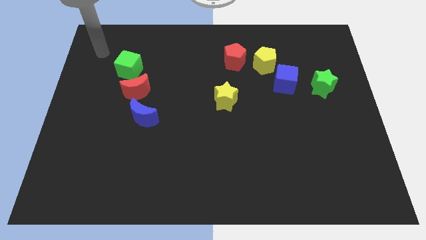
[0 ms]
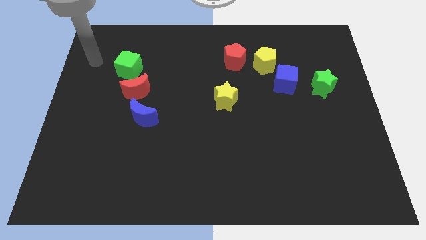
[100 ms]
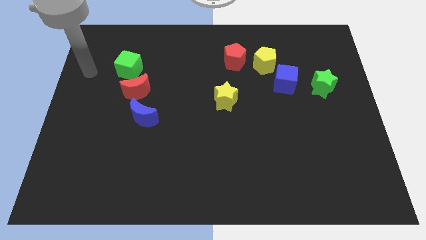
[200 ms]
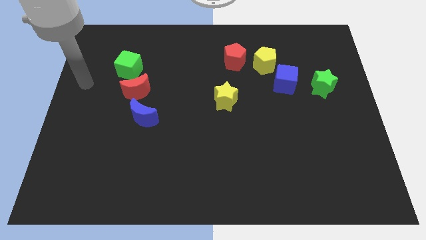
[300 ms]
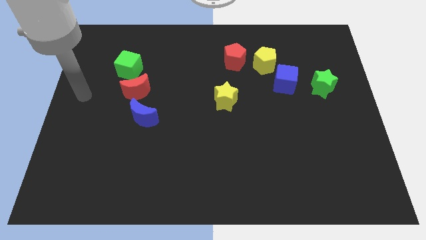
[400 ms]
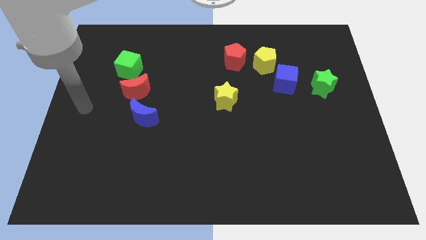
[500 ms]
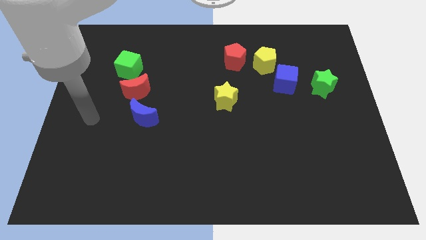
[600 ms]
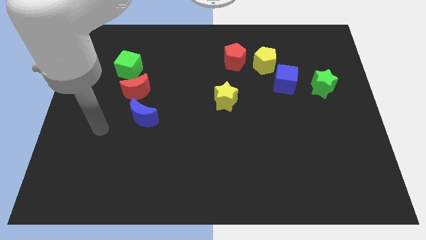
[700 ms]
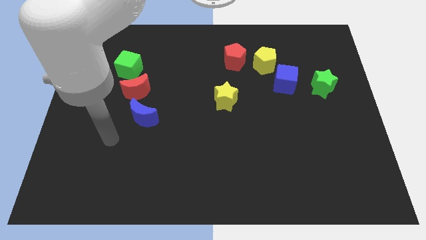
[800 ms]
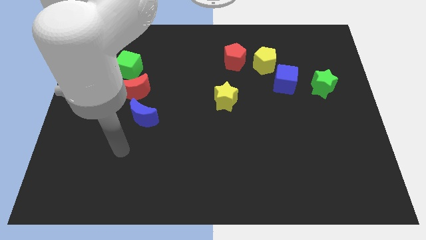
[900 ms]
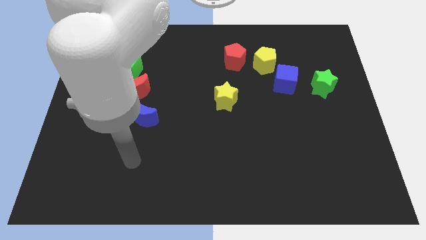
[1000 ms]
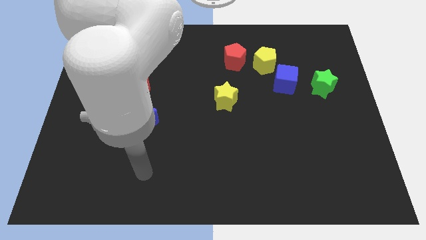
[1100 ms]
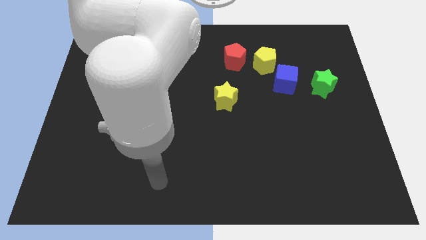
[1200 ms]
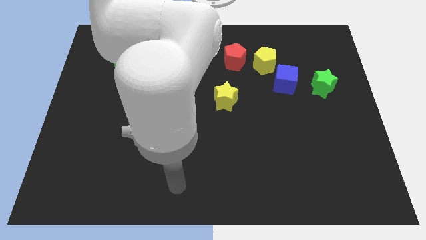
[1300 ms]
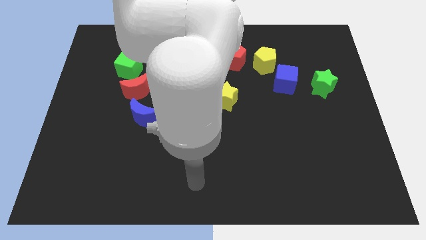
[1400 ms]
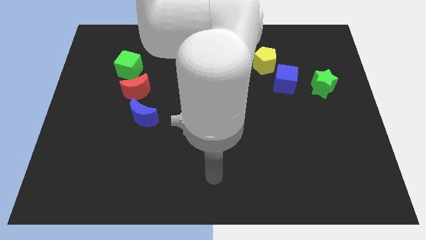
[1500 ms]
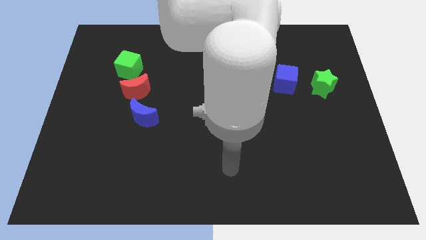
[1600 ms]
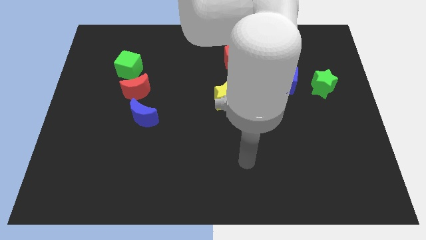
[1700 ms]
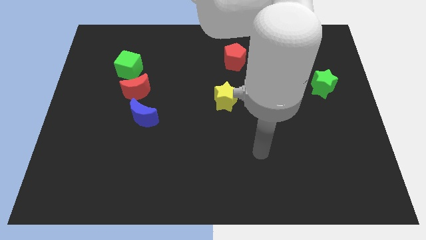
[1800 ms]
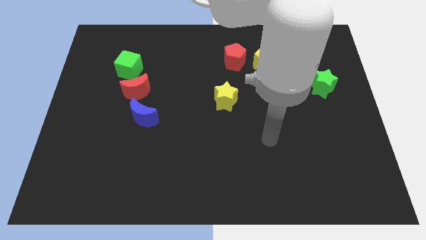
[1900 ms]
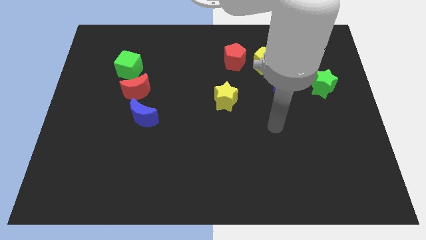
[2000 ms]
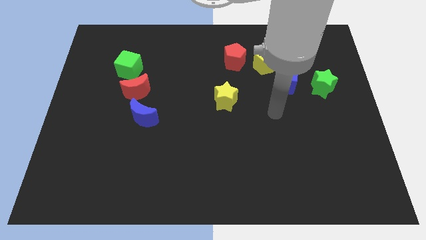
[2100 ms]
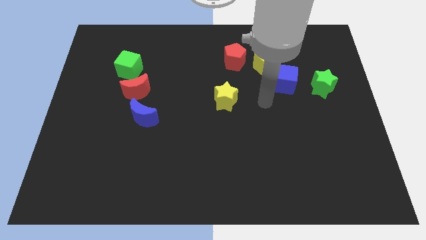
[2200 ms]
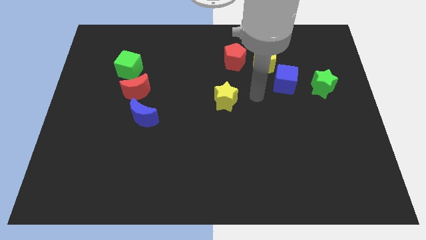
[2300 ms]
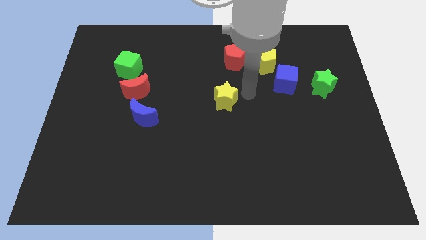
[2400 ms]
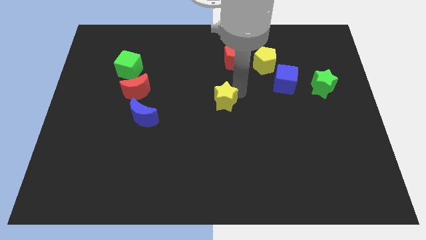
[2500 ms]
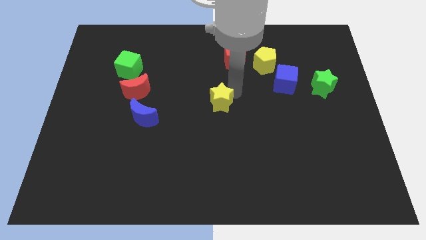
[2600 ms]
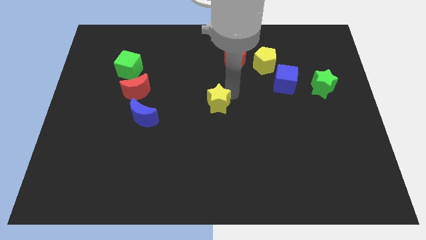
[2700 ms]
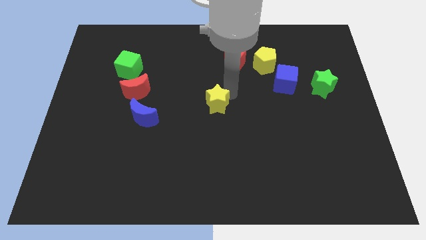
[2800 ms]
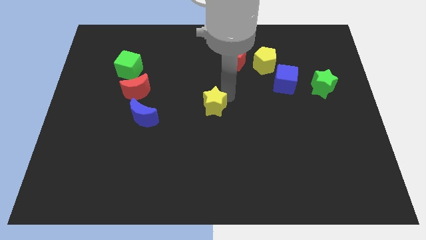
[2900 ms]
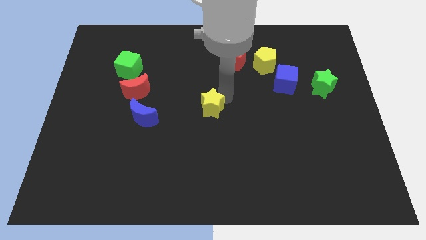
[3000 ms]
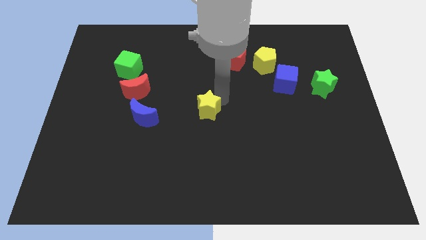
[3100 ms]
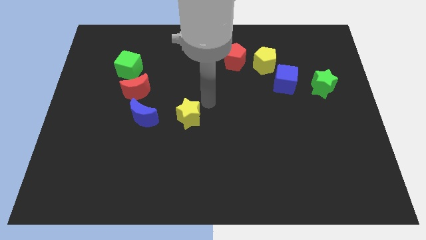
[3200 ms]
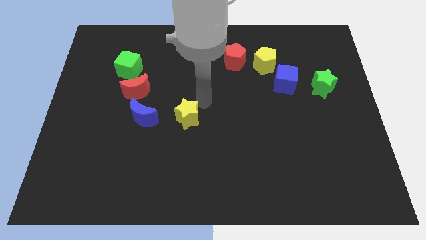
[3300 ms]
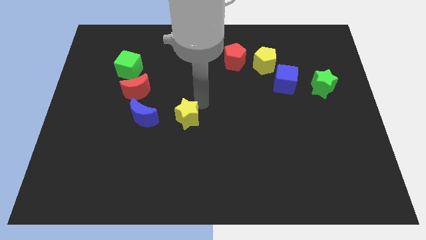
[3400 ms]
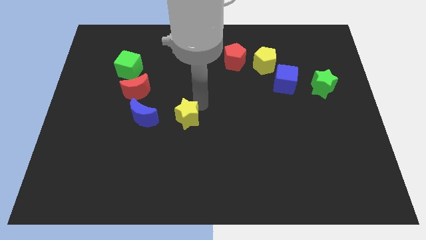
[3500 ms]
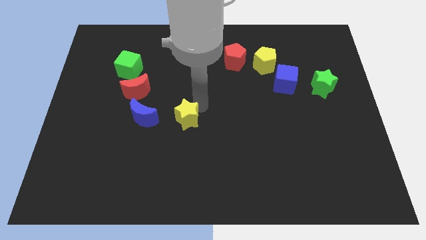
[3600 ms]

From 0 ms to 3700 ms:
place the yellow star to the right of the blue moon

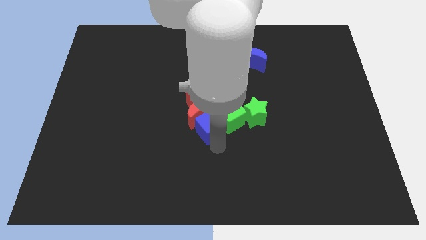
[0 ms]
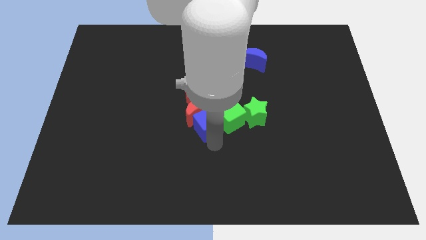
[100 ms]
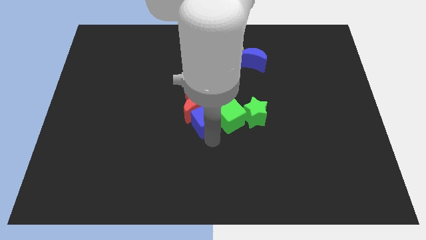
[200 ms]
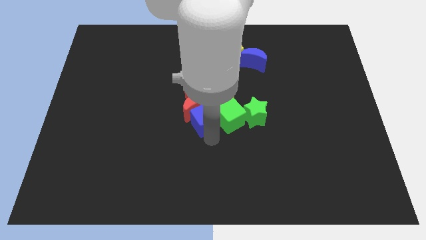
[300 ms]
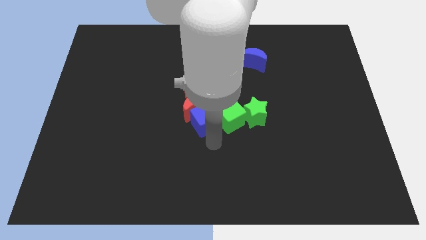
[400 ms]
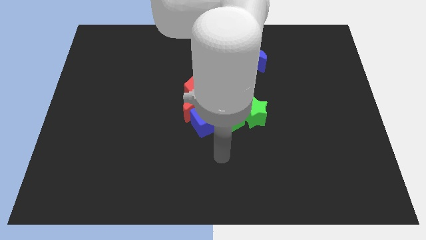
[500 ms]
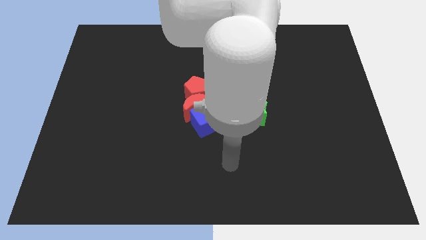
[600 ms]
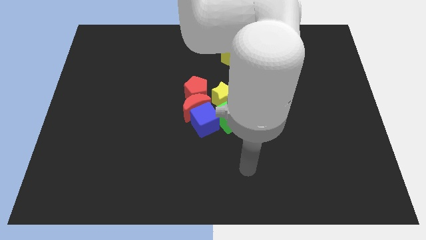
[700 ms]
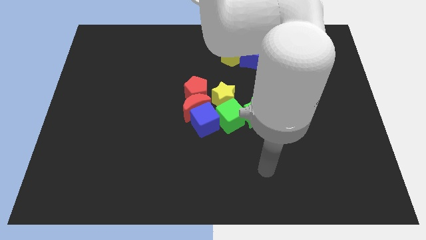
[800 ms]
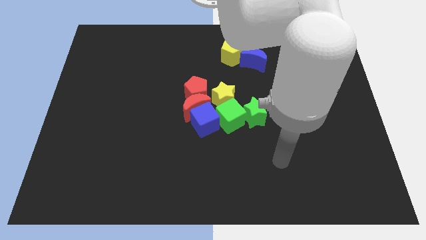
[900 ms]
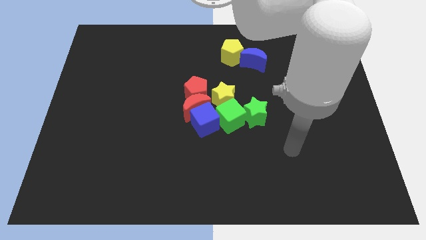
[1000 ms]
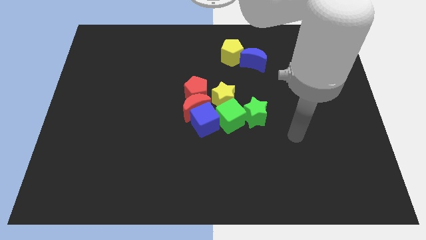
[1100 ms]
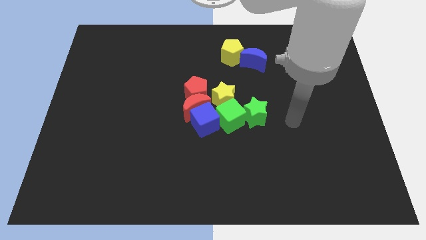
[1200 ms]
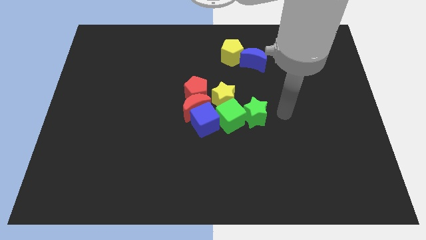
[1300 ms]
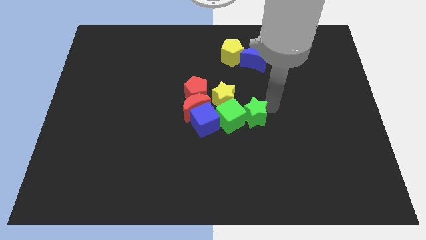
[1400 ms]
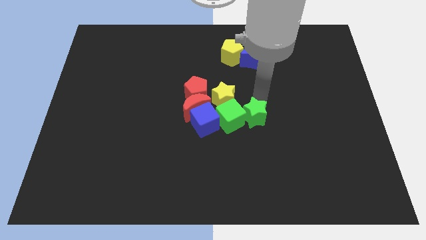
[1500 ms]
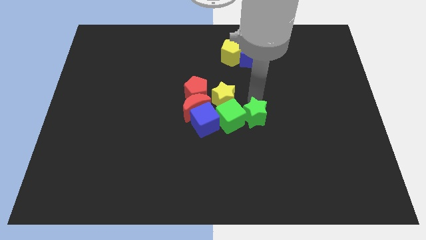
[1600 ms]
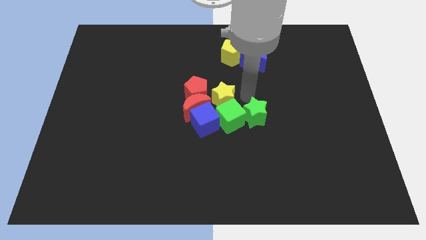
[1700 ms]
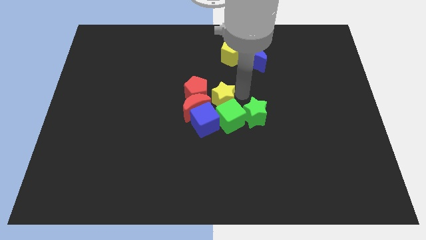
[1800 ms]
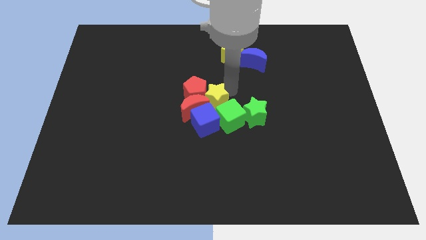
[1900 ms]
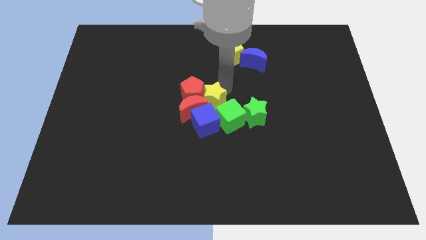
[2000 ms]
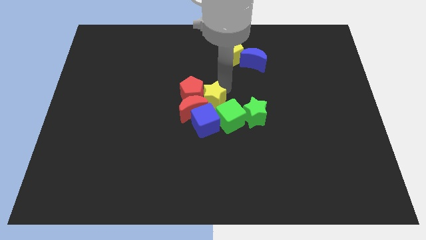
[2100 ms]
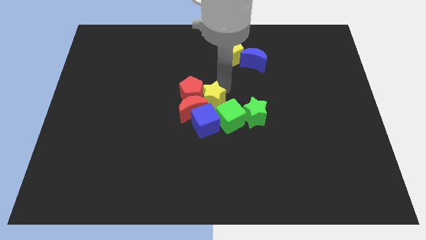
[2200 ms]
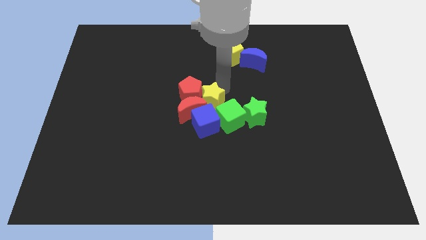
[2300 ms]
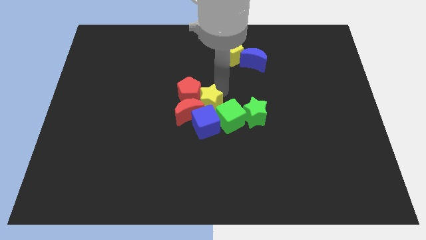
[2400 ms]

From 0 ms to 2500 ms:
push the blue cube and yellow star into red blocks

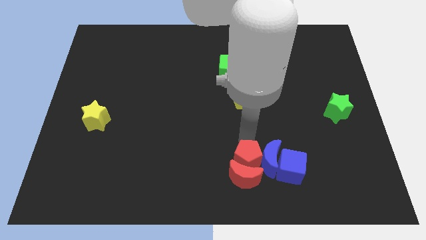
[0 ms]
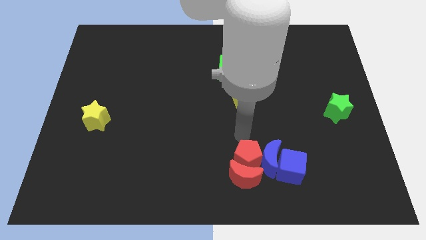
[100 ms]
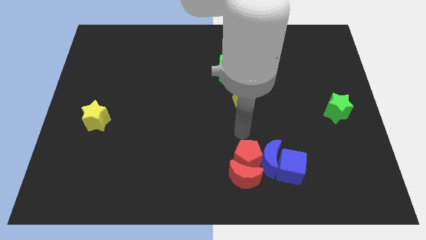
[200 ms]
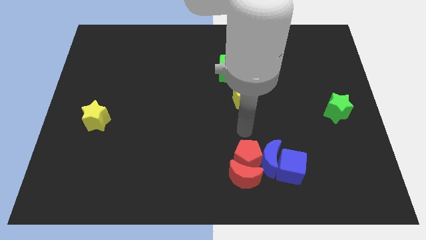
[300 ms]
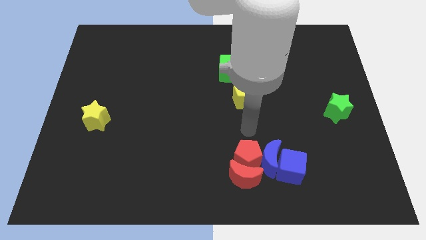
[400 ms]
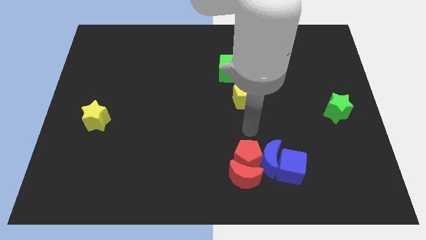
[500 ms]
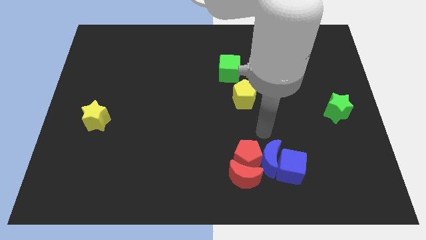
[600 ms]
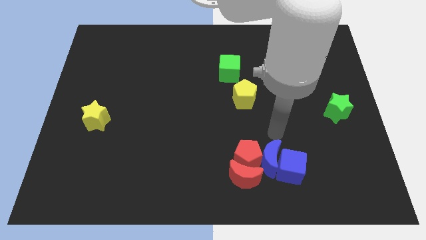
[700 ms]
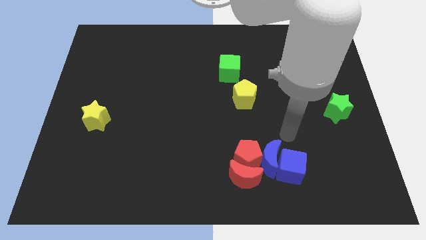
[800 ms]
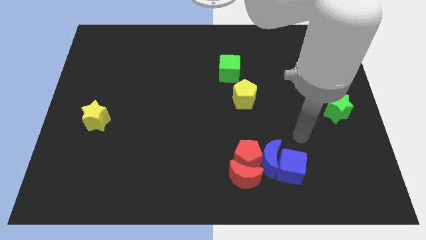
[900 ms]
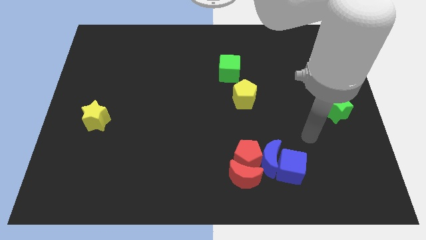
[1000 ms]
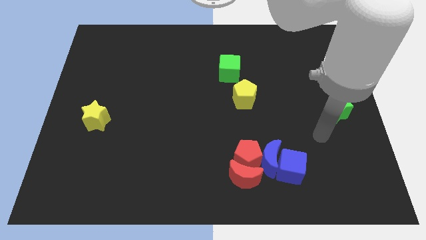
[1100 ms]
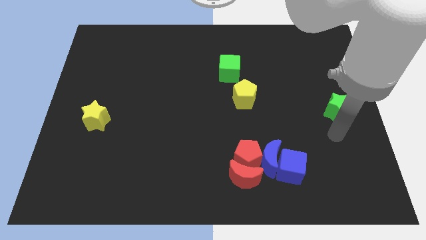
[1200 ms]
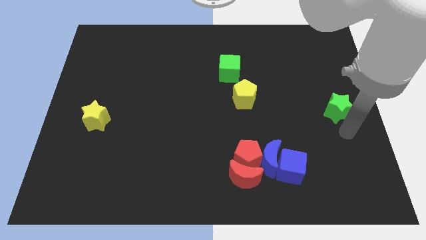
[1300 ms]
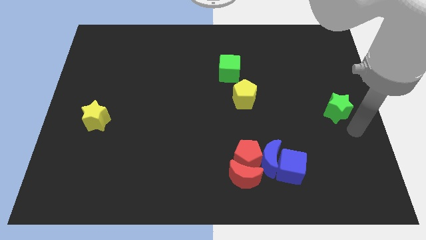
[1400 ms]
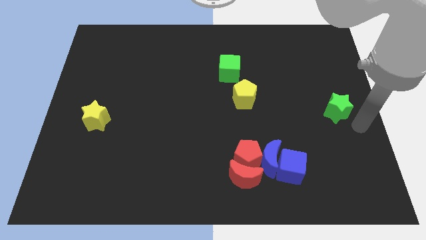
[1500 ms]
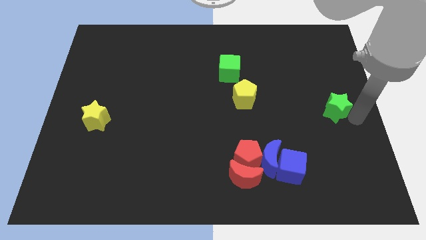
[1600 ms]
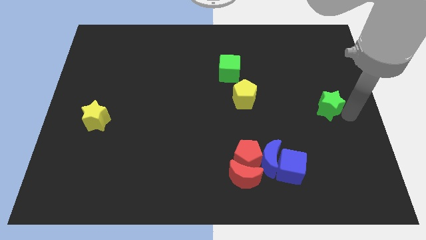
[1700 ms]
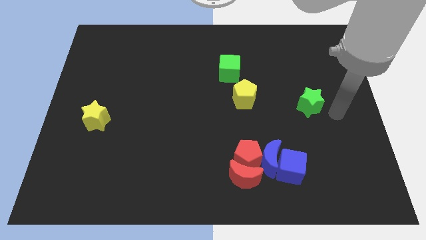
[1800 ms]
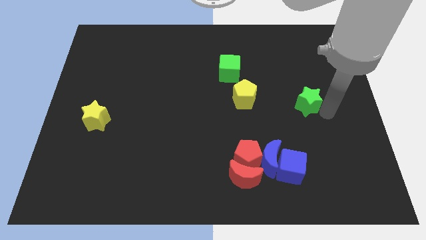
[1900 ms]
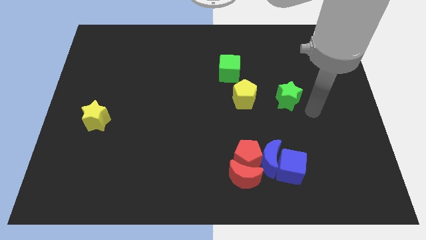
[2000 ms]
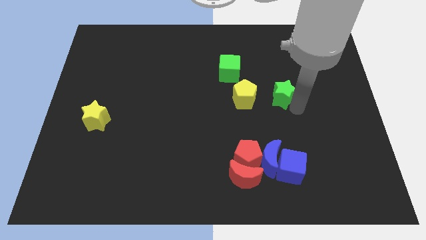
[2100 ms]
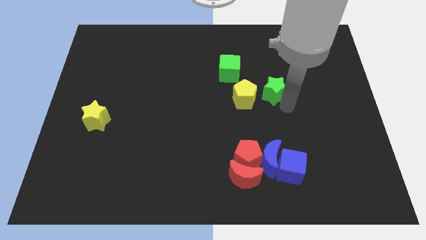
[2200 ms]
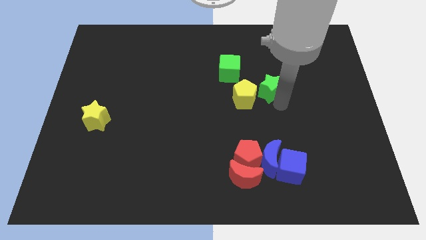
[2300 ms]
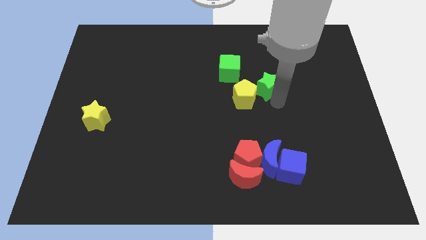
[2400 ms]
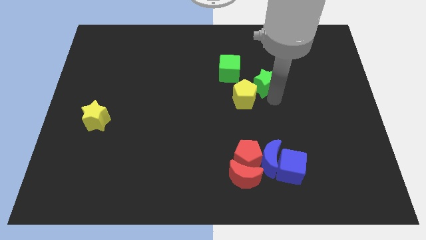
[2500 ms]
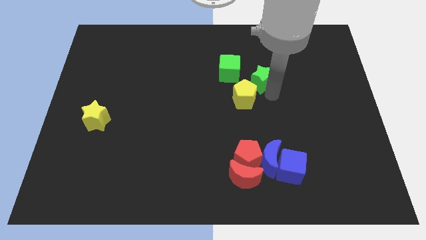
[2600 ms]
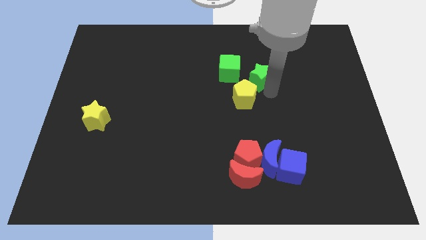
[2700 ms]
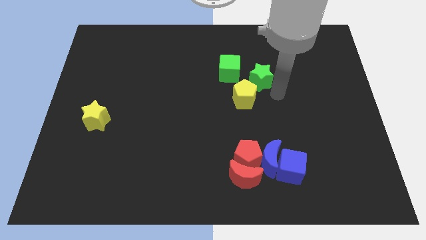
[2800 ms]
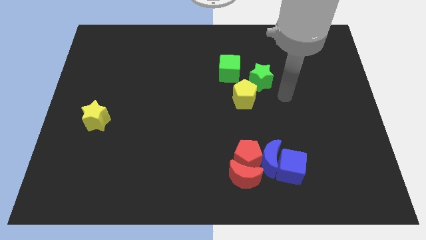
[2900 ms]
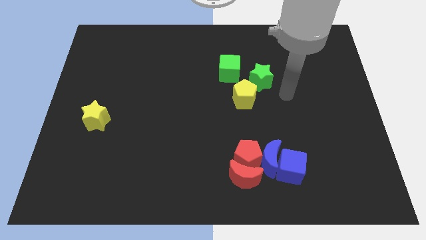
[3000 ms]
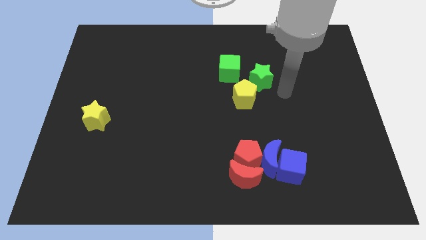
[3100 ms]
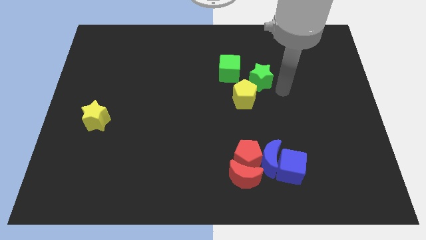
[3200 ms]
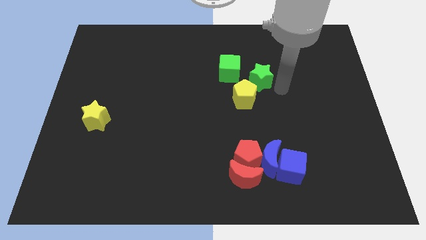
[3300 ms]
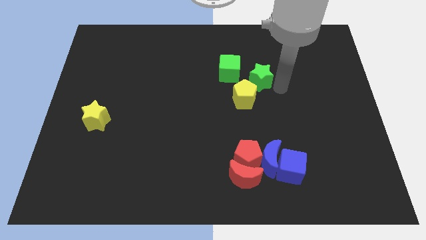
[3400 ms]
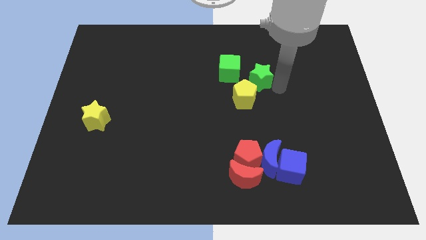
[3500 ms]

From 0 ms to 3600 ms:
place the green star above the blue crescent
